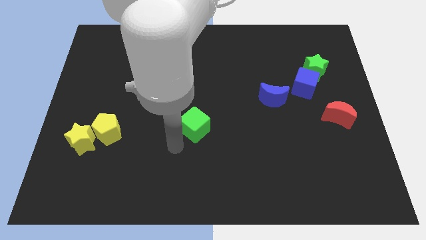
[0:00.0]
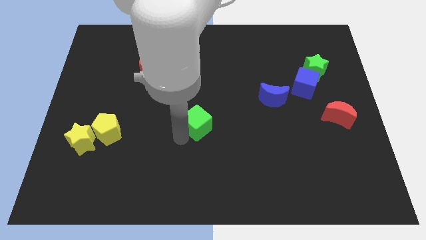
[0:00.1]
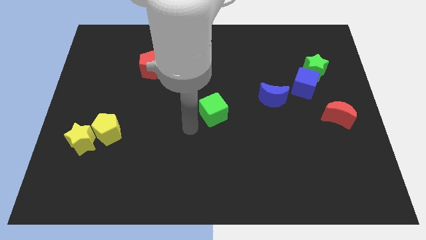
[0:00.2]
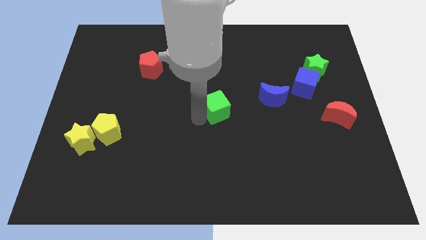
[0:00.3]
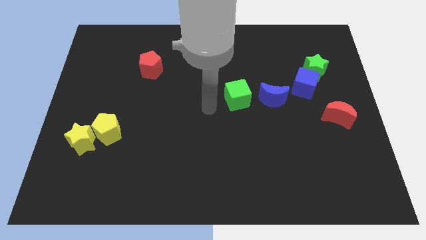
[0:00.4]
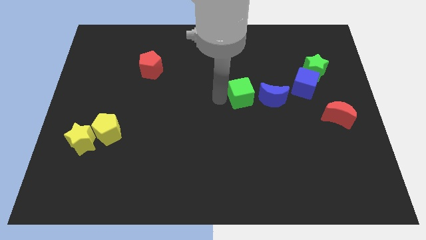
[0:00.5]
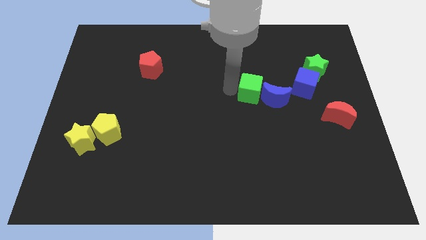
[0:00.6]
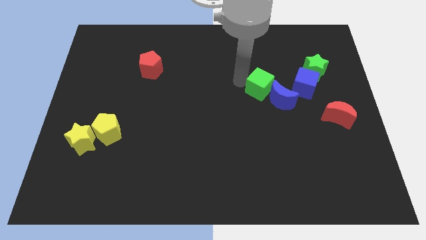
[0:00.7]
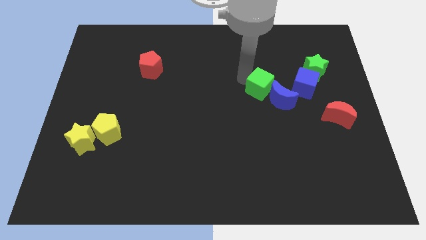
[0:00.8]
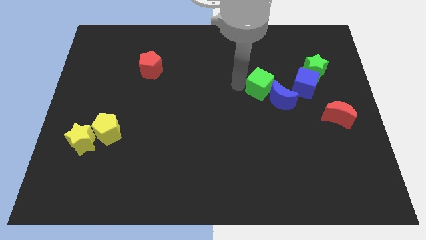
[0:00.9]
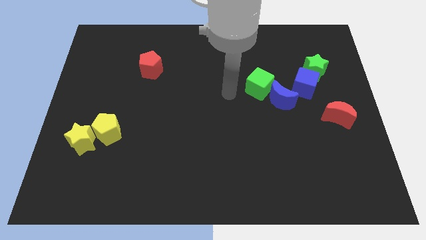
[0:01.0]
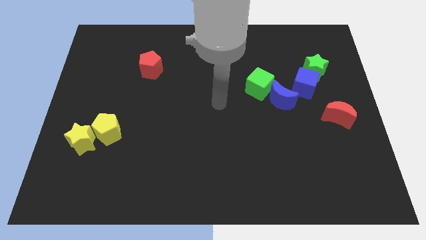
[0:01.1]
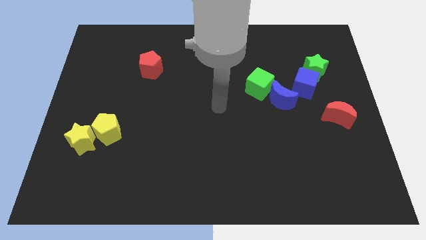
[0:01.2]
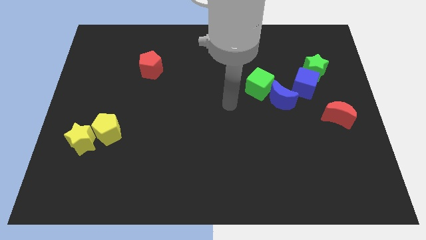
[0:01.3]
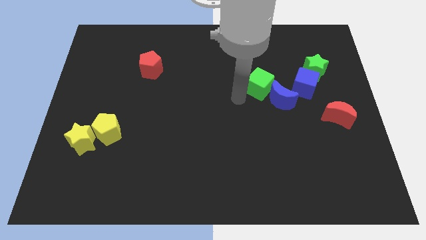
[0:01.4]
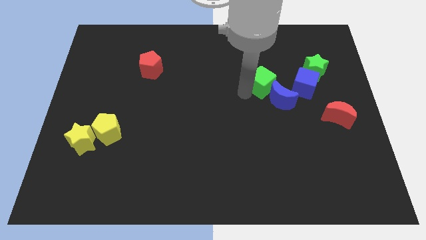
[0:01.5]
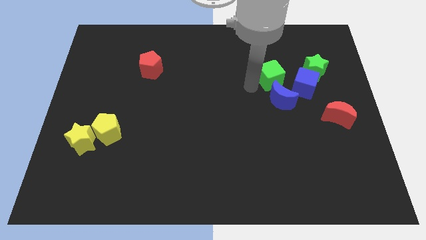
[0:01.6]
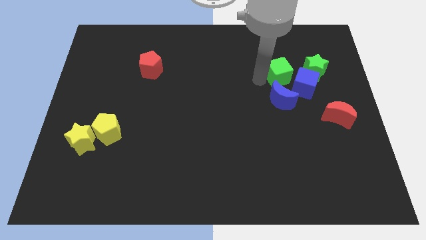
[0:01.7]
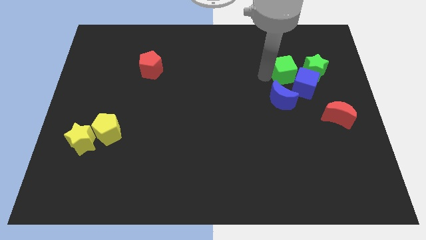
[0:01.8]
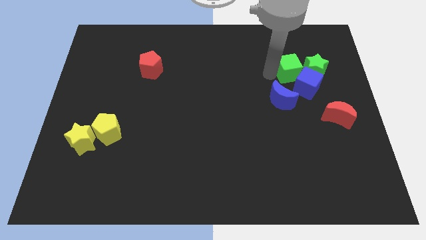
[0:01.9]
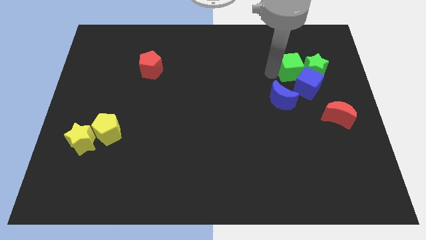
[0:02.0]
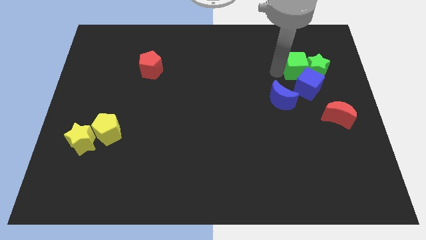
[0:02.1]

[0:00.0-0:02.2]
move green cube to the left of green star

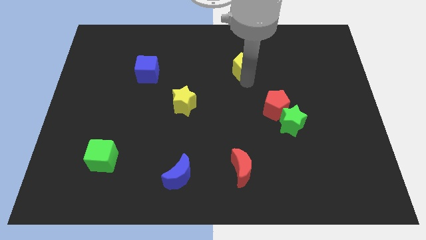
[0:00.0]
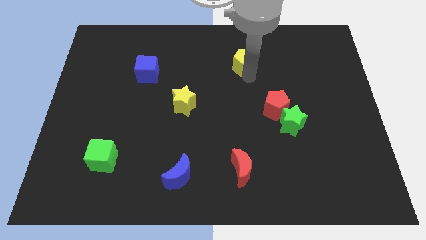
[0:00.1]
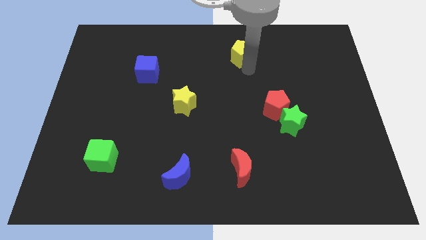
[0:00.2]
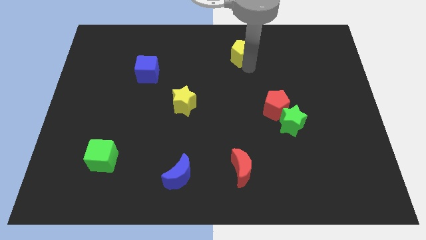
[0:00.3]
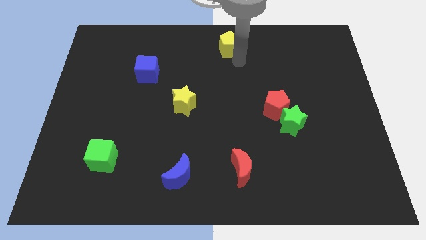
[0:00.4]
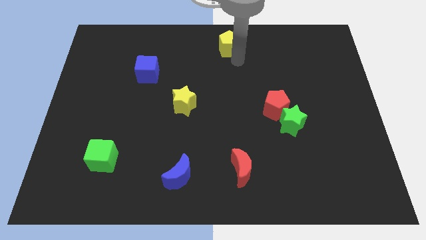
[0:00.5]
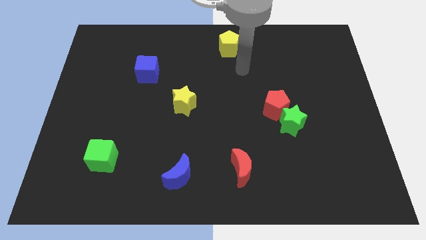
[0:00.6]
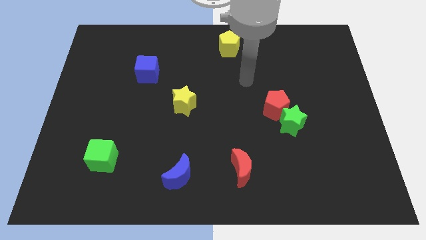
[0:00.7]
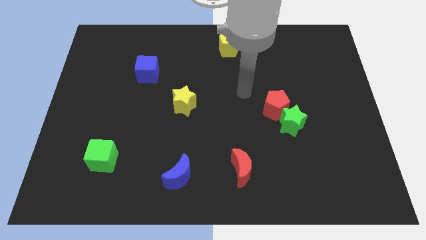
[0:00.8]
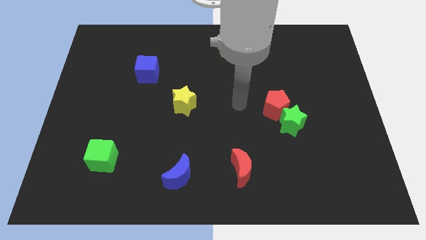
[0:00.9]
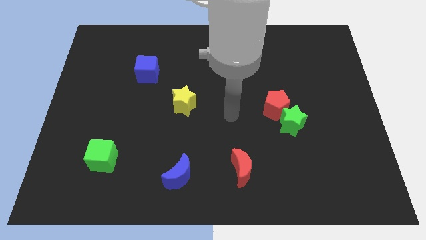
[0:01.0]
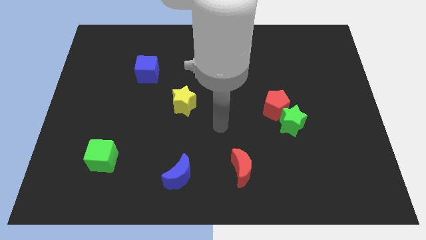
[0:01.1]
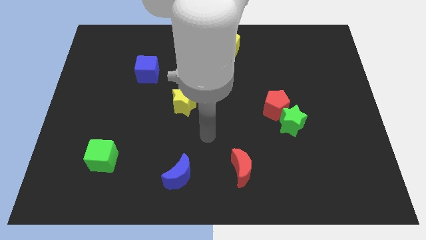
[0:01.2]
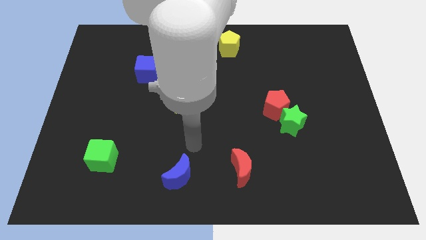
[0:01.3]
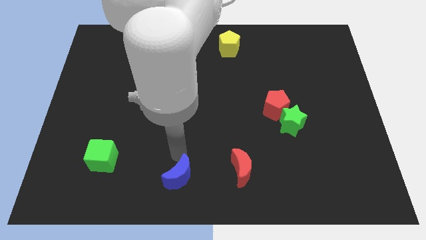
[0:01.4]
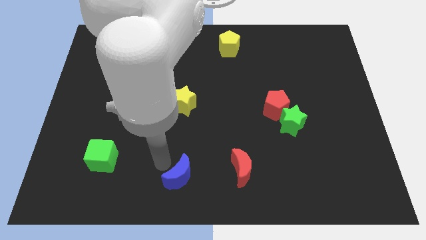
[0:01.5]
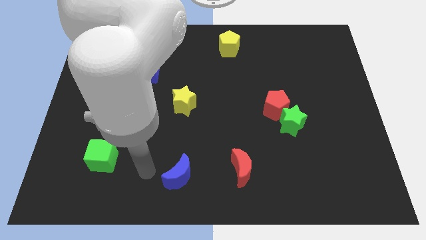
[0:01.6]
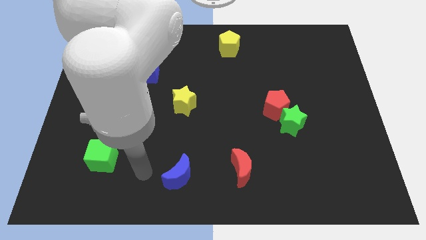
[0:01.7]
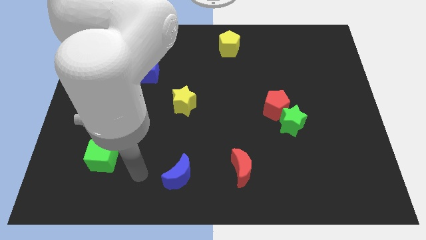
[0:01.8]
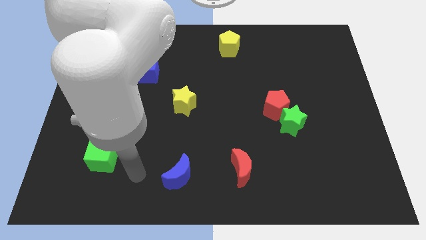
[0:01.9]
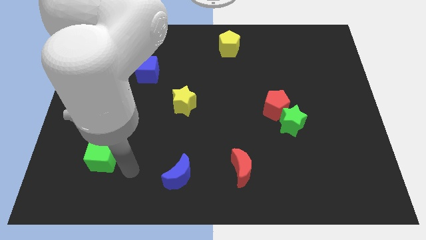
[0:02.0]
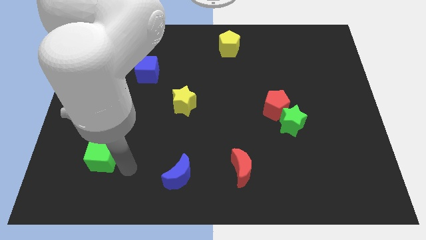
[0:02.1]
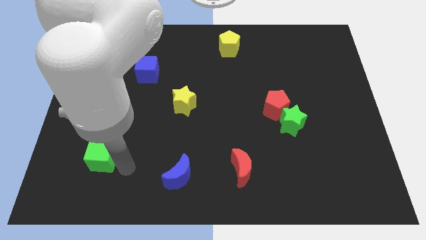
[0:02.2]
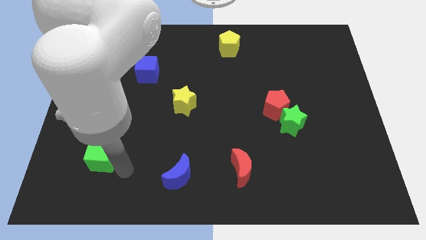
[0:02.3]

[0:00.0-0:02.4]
push the yellow pentagon upwards and point your arm beside green cube

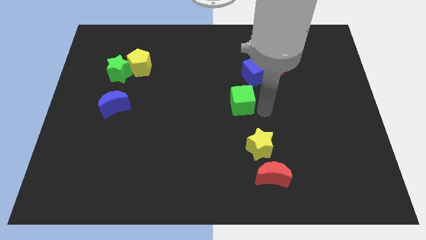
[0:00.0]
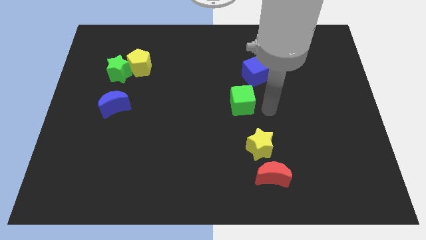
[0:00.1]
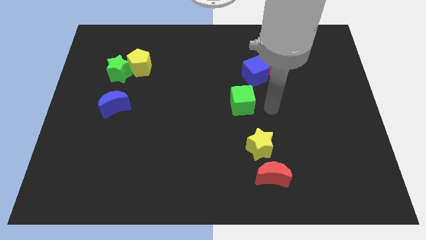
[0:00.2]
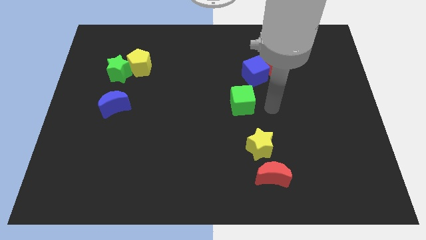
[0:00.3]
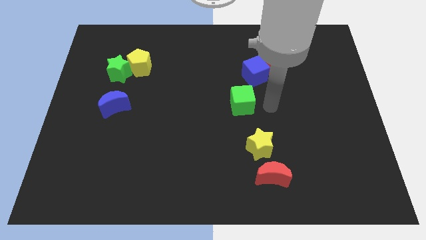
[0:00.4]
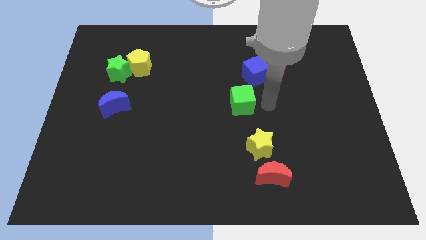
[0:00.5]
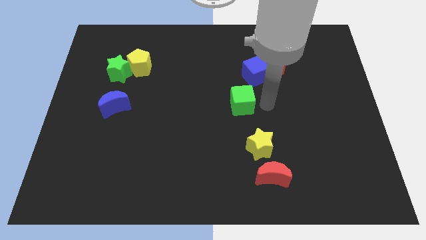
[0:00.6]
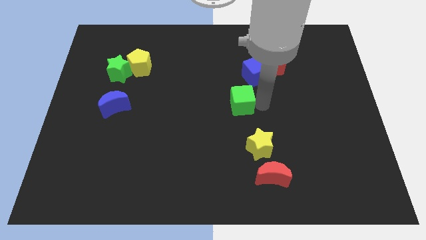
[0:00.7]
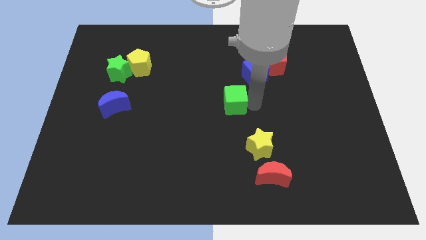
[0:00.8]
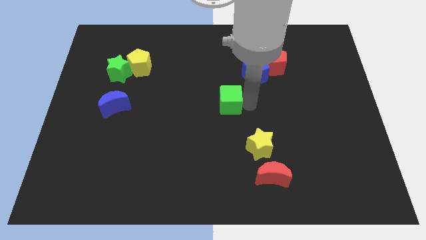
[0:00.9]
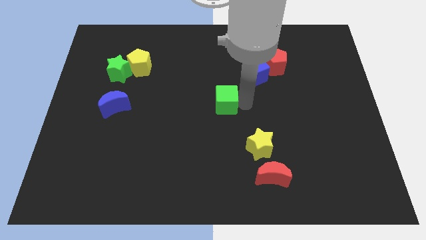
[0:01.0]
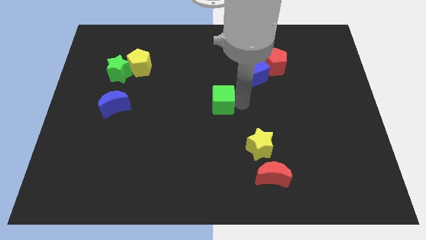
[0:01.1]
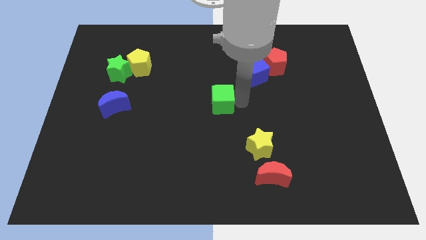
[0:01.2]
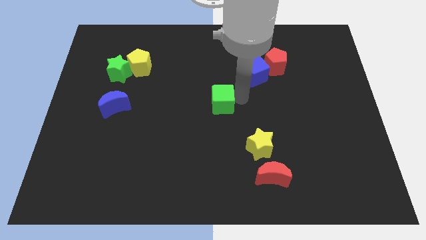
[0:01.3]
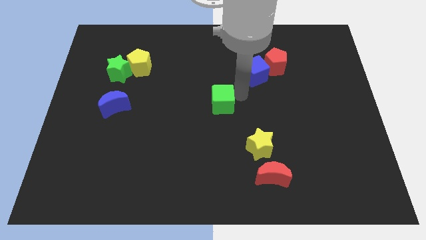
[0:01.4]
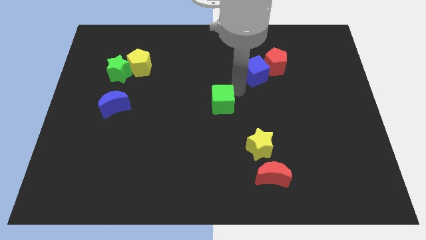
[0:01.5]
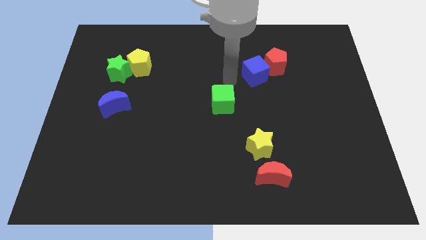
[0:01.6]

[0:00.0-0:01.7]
slide the green cube to the center of the board

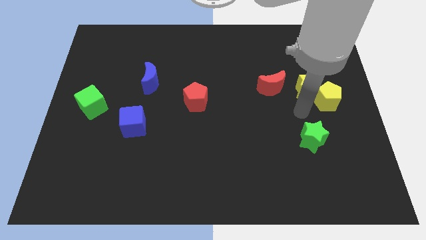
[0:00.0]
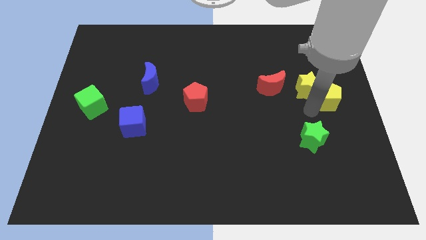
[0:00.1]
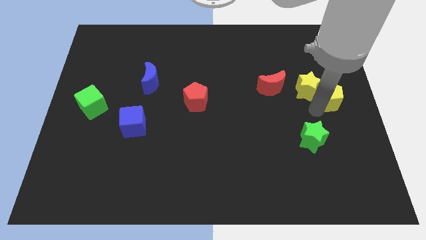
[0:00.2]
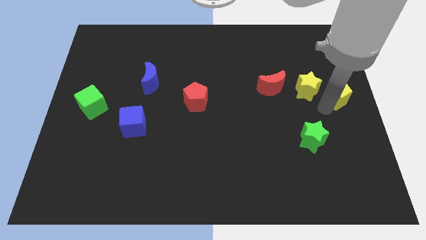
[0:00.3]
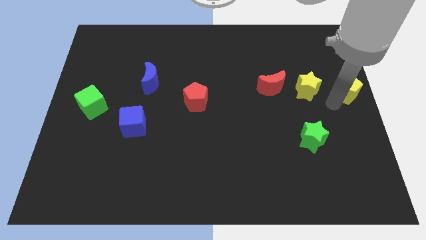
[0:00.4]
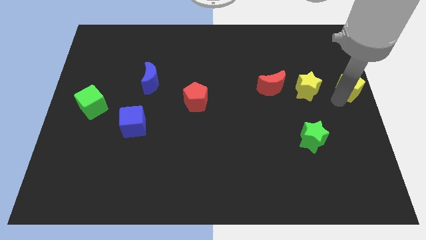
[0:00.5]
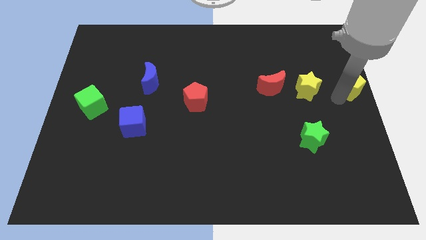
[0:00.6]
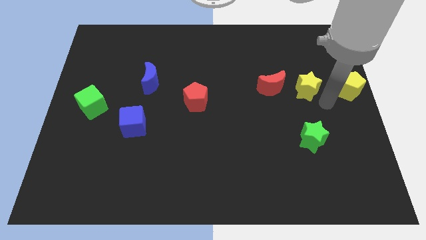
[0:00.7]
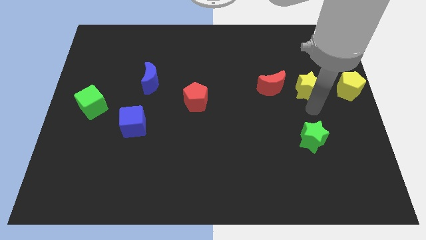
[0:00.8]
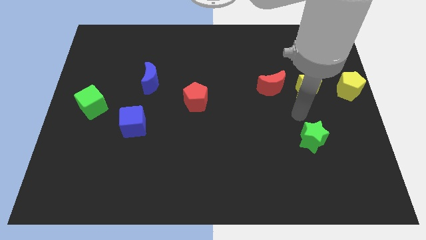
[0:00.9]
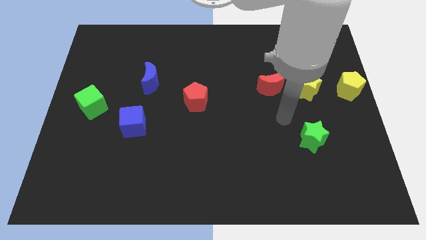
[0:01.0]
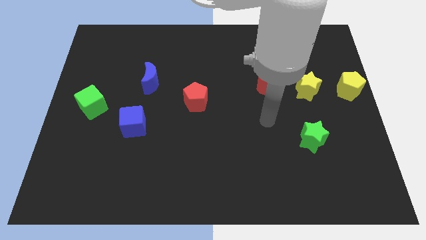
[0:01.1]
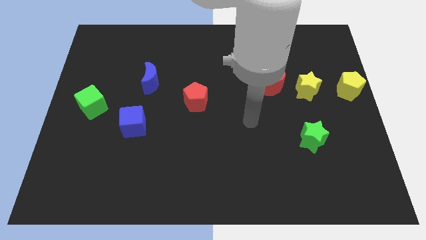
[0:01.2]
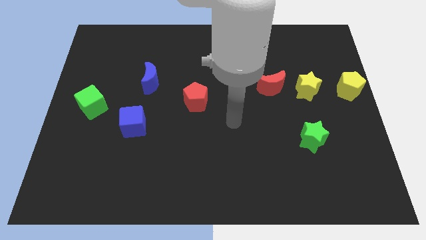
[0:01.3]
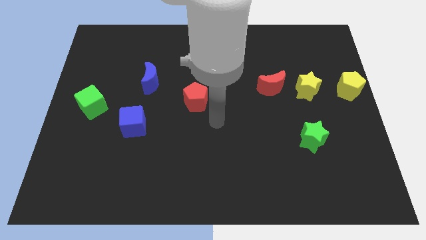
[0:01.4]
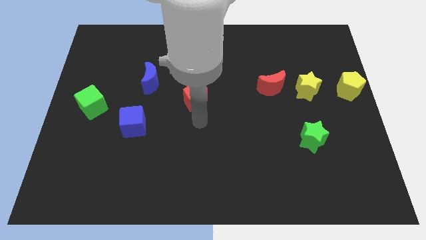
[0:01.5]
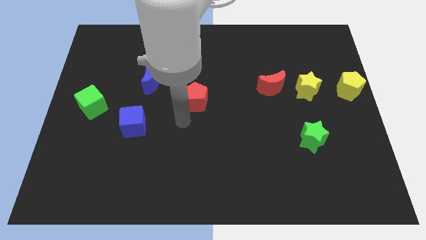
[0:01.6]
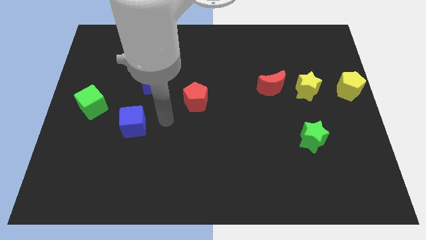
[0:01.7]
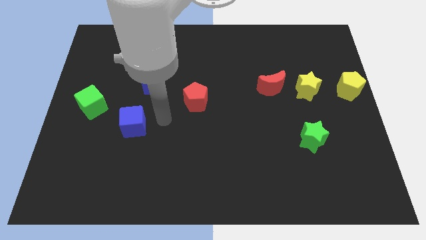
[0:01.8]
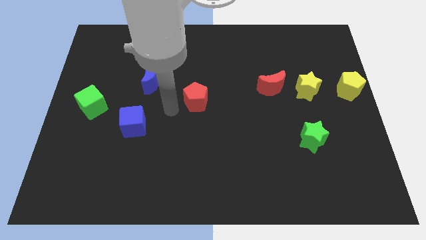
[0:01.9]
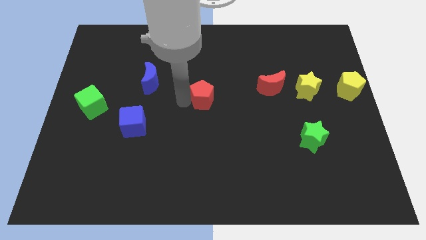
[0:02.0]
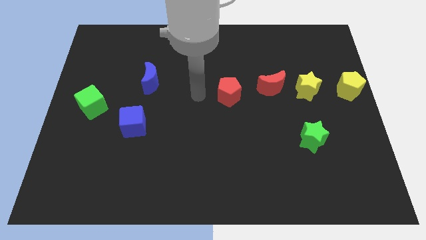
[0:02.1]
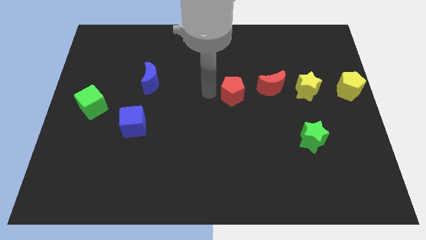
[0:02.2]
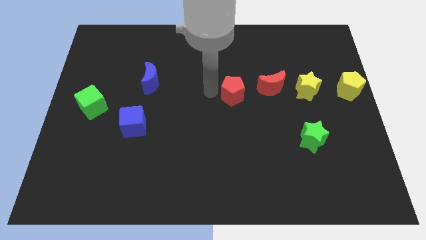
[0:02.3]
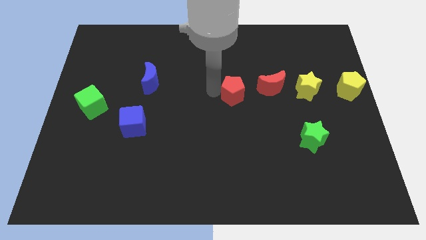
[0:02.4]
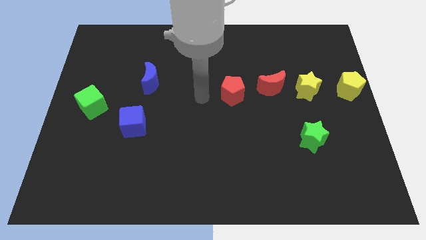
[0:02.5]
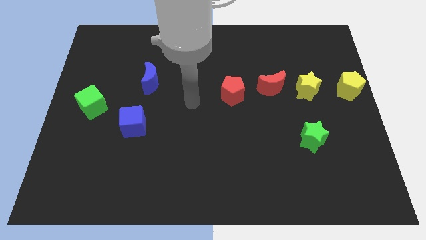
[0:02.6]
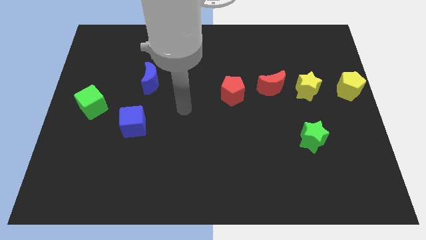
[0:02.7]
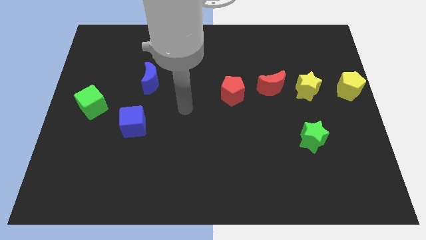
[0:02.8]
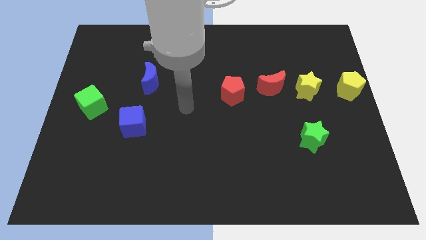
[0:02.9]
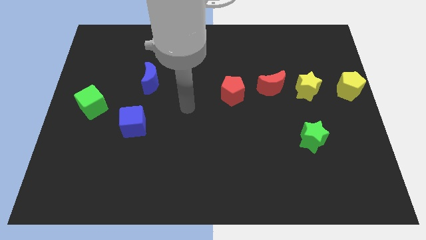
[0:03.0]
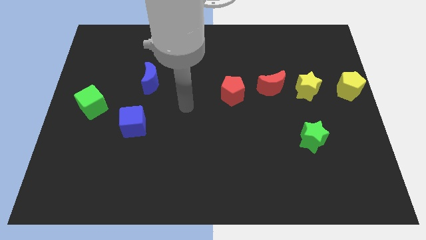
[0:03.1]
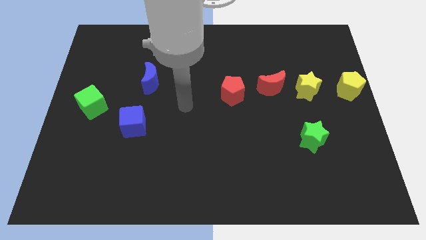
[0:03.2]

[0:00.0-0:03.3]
place the yellow pentagon to the right side of yellow star
